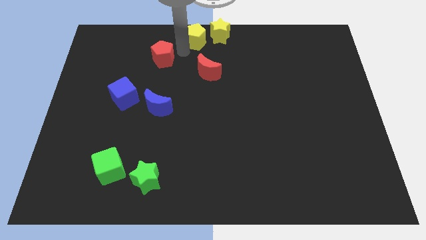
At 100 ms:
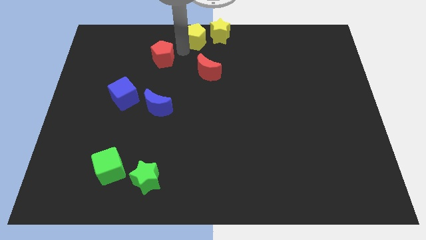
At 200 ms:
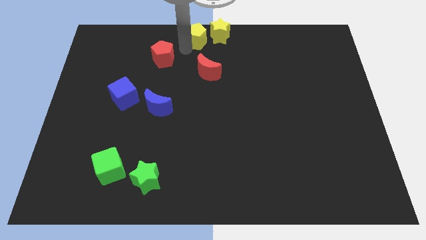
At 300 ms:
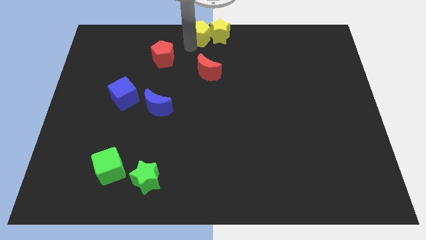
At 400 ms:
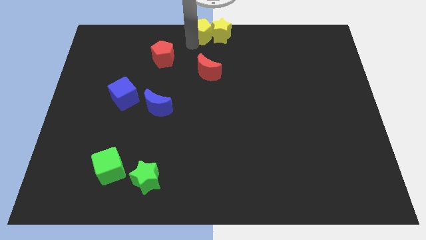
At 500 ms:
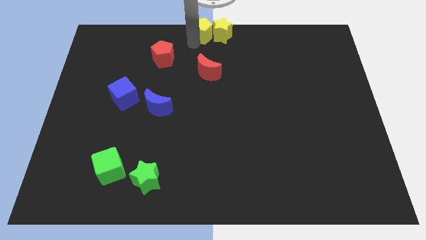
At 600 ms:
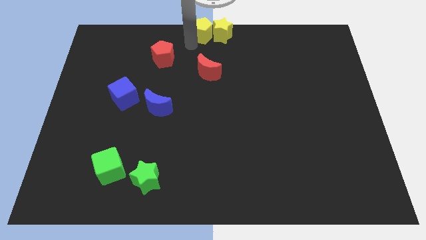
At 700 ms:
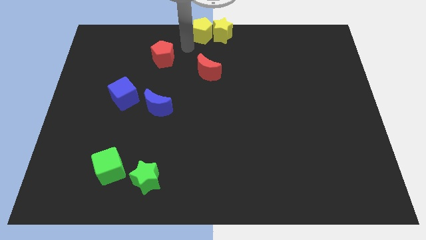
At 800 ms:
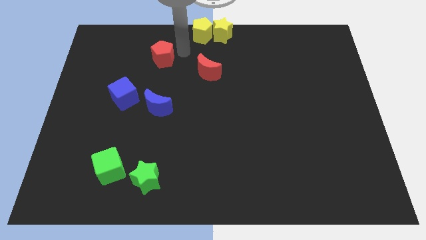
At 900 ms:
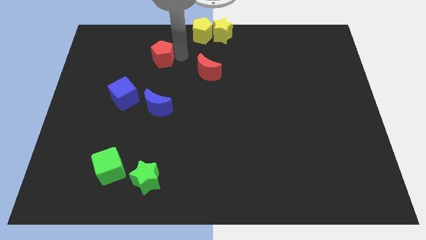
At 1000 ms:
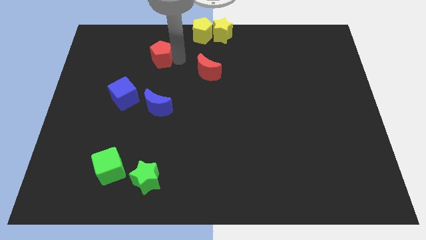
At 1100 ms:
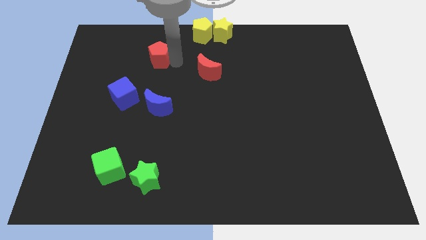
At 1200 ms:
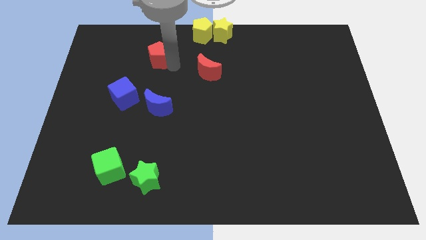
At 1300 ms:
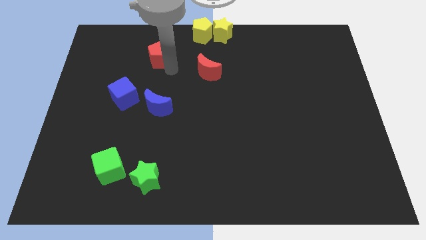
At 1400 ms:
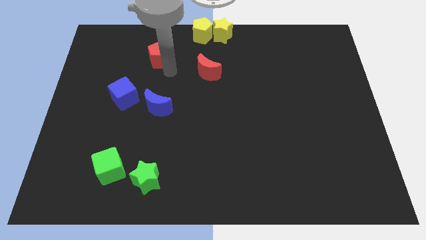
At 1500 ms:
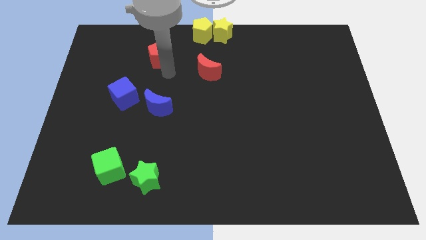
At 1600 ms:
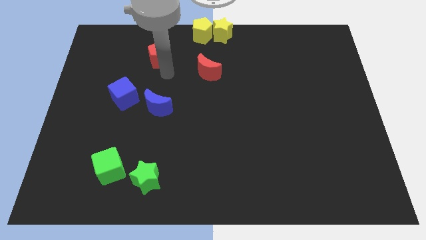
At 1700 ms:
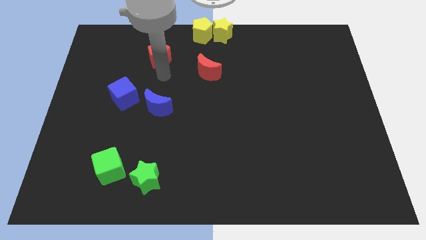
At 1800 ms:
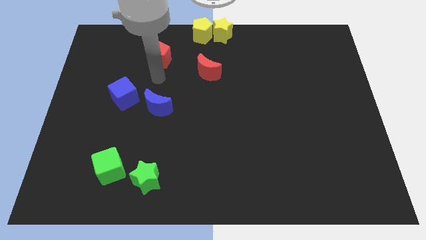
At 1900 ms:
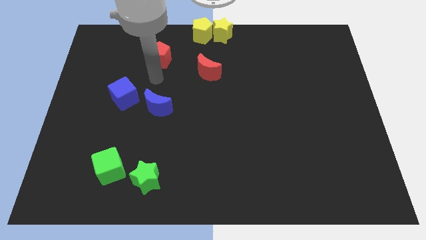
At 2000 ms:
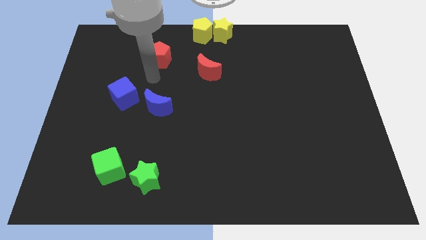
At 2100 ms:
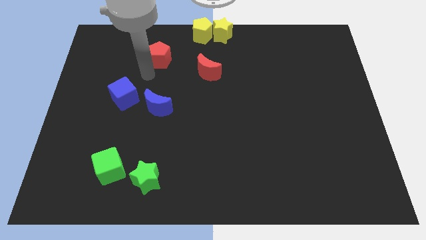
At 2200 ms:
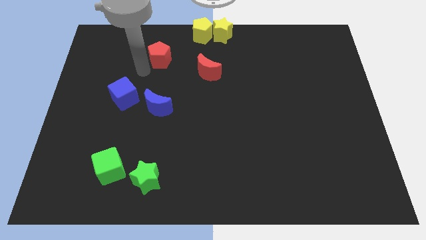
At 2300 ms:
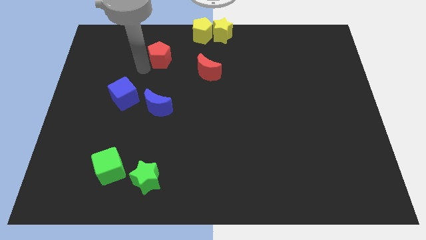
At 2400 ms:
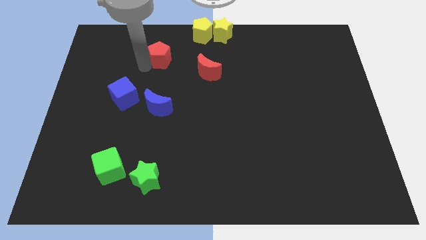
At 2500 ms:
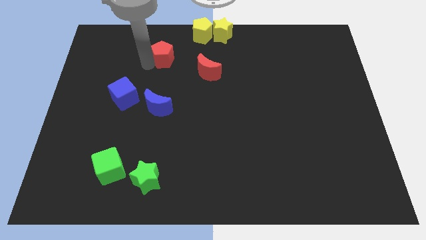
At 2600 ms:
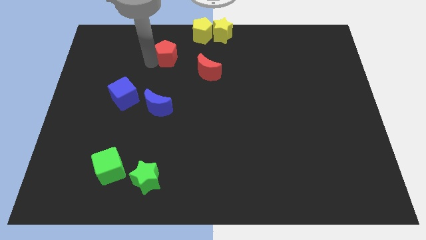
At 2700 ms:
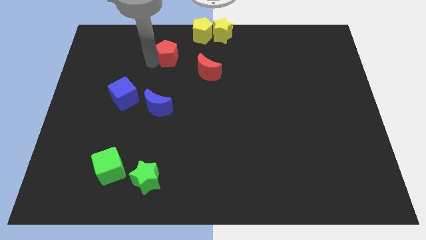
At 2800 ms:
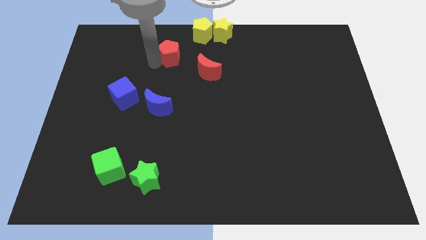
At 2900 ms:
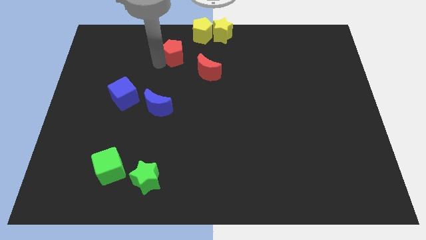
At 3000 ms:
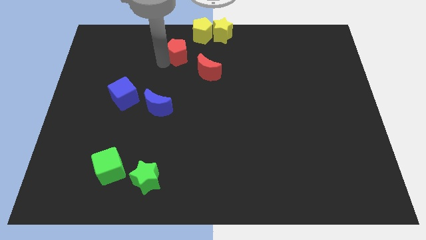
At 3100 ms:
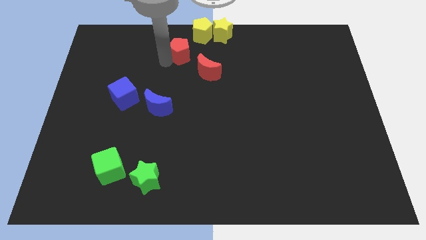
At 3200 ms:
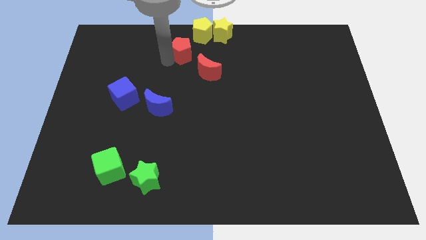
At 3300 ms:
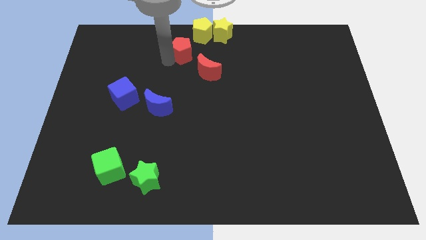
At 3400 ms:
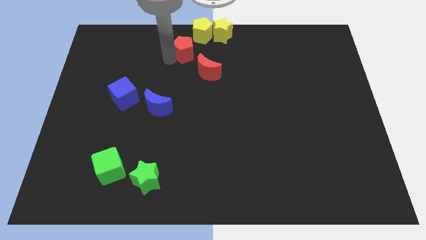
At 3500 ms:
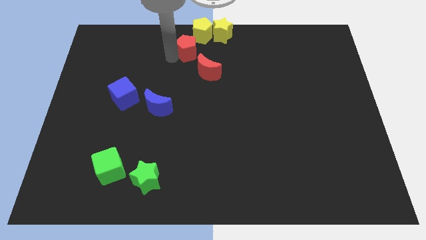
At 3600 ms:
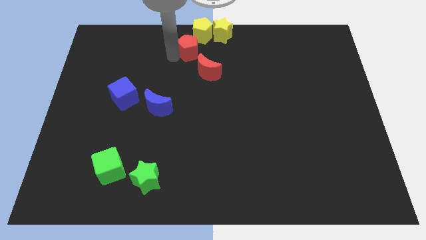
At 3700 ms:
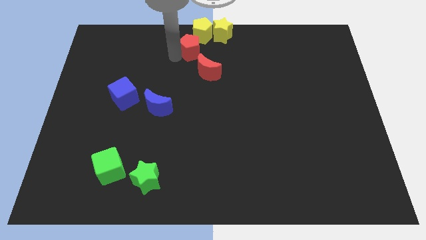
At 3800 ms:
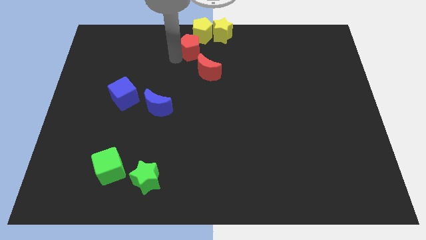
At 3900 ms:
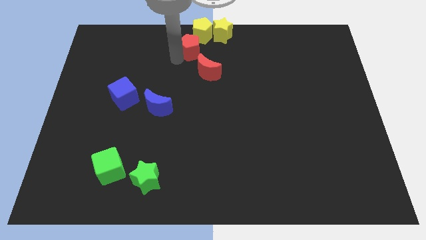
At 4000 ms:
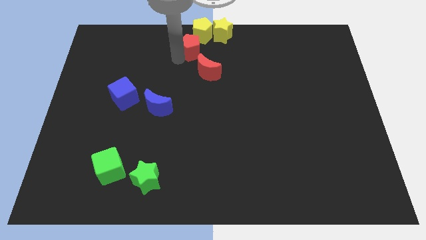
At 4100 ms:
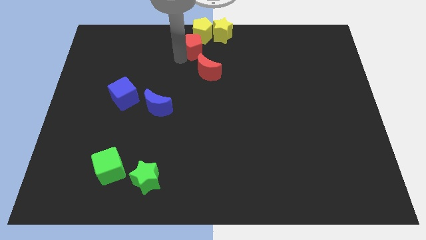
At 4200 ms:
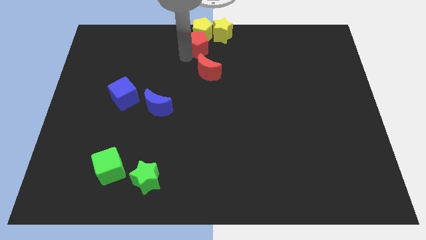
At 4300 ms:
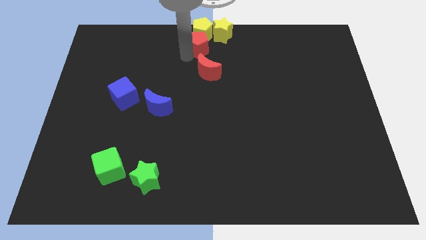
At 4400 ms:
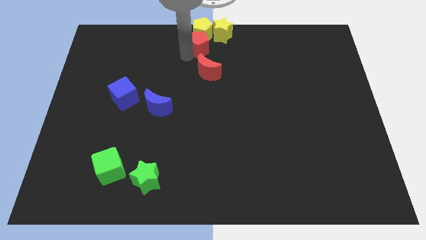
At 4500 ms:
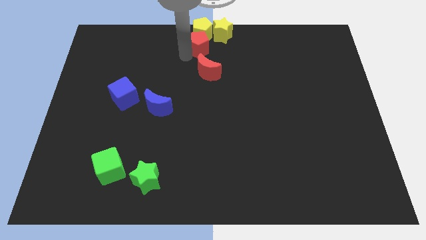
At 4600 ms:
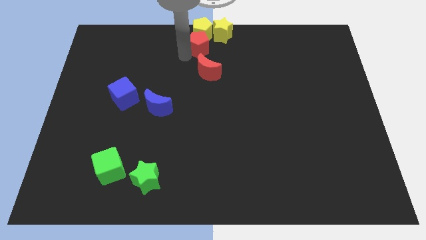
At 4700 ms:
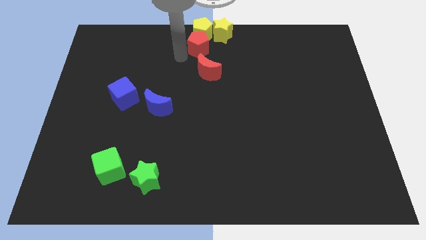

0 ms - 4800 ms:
place red pentagon below the yellow pentagon

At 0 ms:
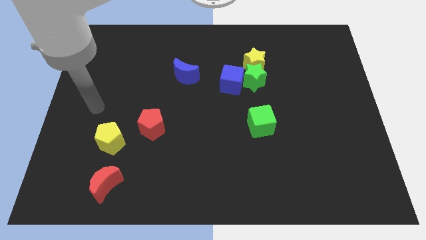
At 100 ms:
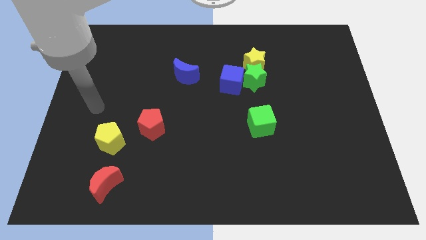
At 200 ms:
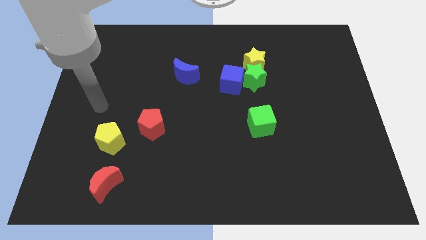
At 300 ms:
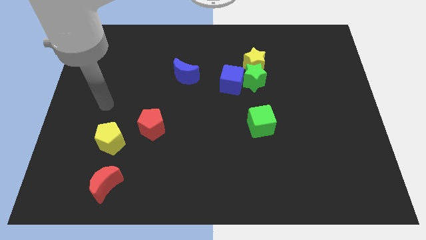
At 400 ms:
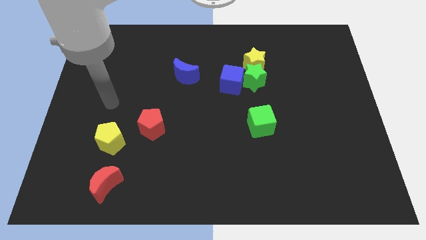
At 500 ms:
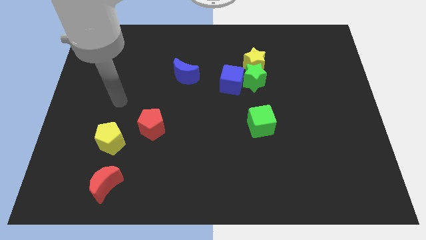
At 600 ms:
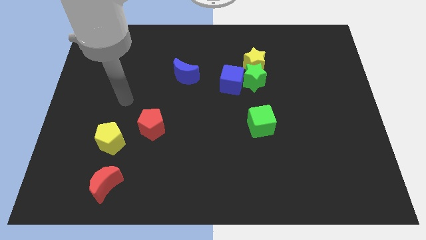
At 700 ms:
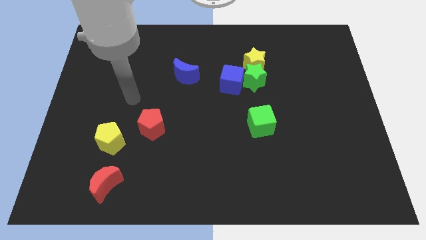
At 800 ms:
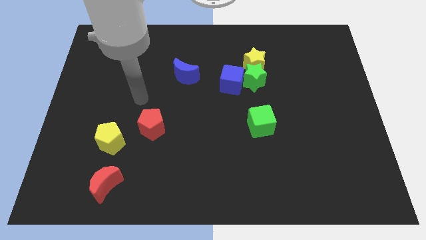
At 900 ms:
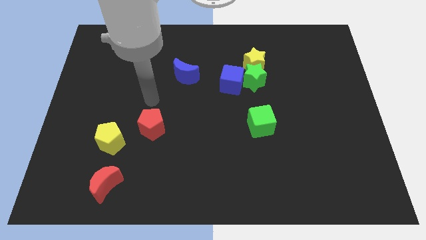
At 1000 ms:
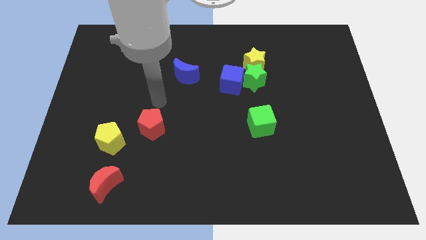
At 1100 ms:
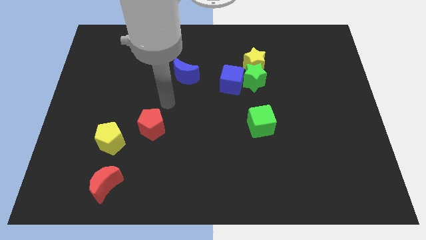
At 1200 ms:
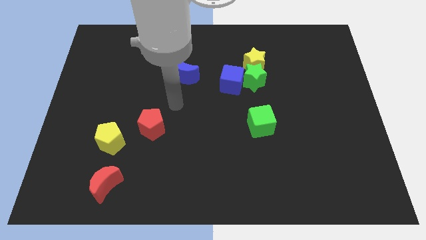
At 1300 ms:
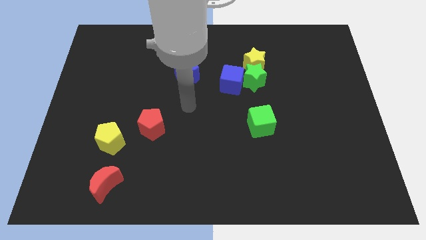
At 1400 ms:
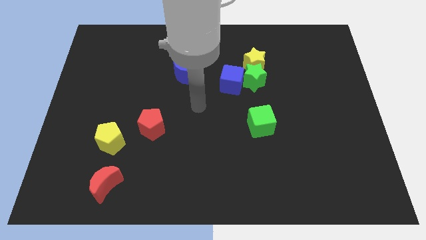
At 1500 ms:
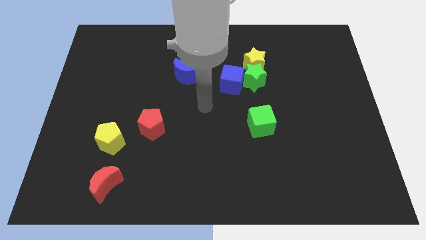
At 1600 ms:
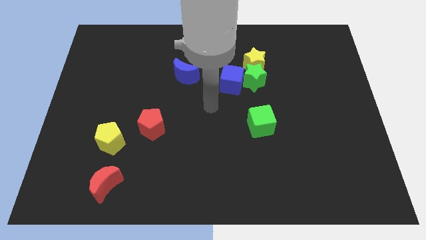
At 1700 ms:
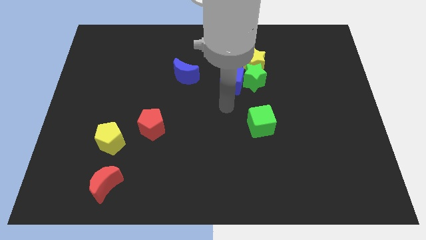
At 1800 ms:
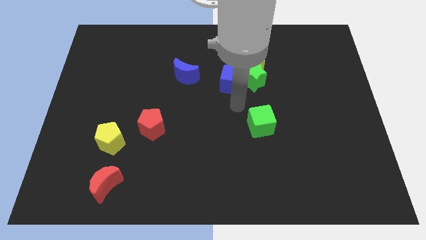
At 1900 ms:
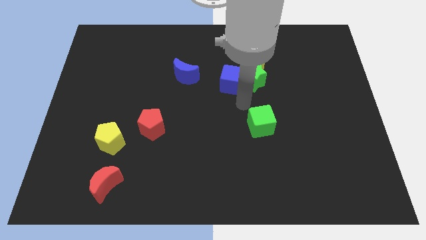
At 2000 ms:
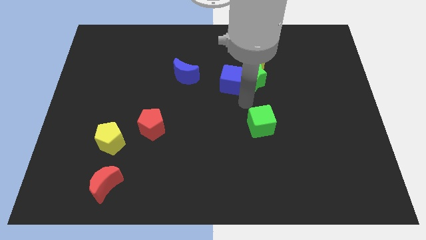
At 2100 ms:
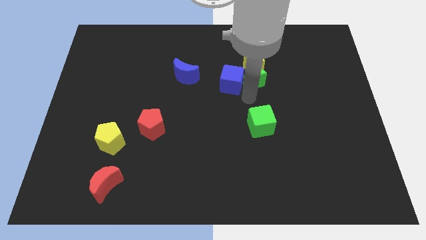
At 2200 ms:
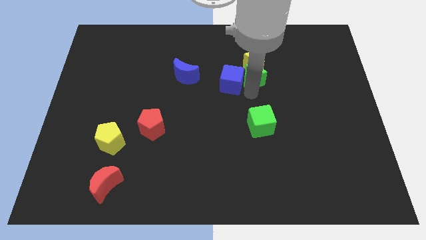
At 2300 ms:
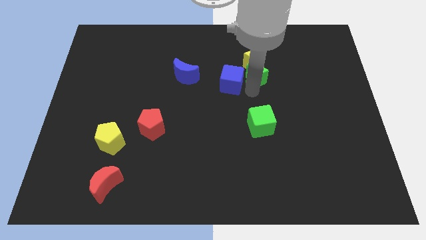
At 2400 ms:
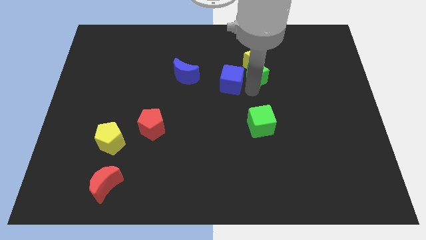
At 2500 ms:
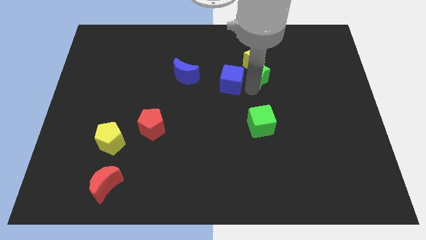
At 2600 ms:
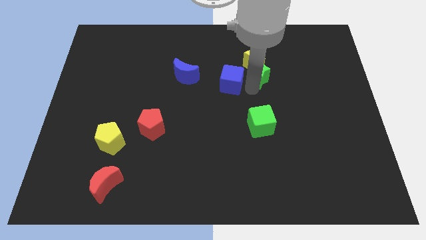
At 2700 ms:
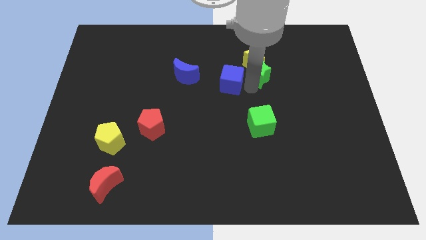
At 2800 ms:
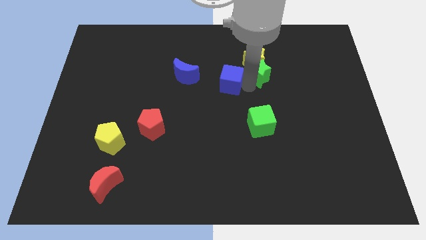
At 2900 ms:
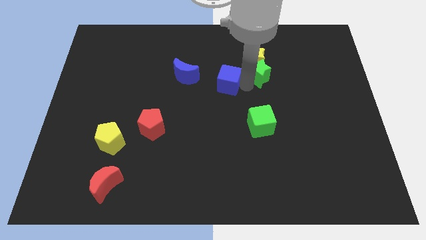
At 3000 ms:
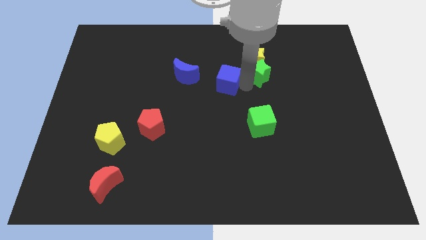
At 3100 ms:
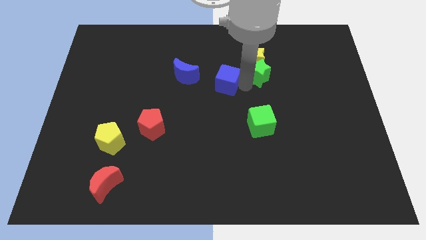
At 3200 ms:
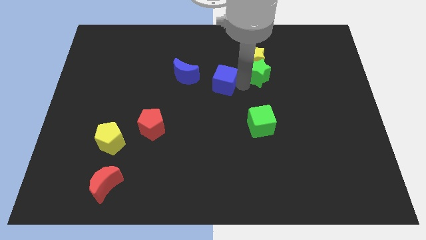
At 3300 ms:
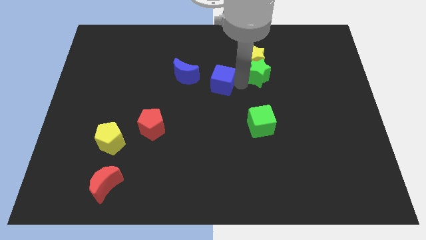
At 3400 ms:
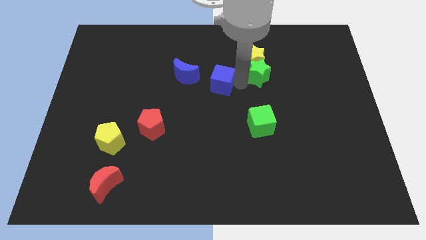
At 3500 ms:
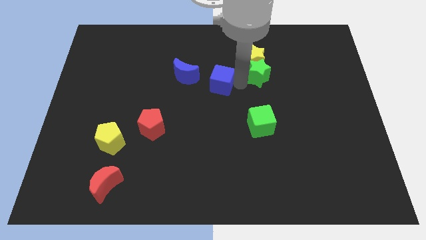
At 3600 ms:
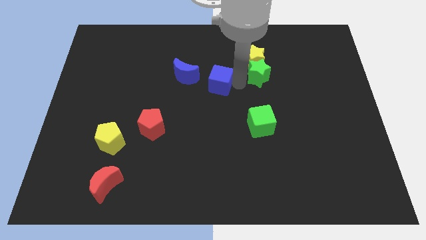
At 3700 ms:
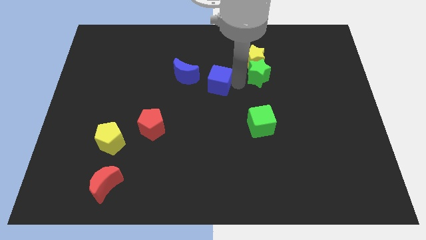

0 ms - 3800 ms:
separate blue cube with green star

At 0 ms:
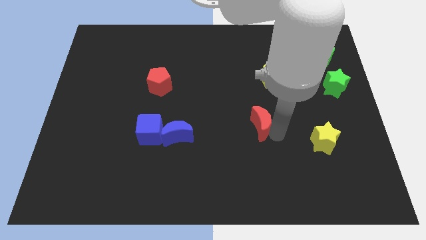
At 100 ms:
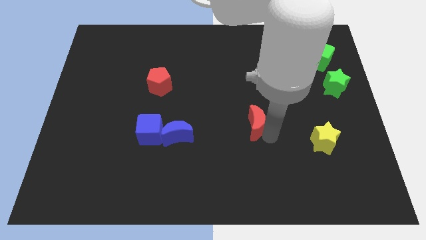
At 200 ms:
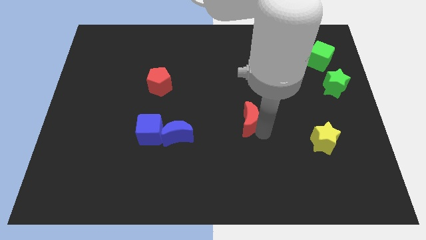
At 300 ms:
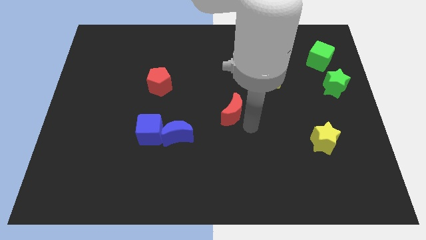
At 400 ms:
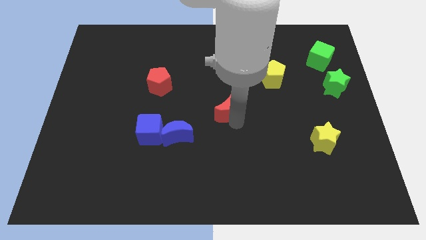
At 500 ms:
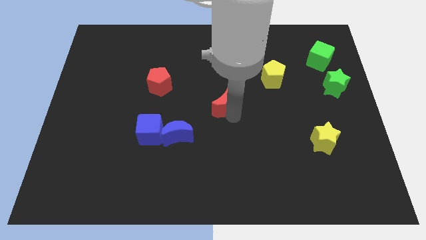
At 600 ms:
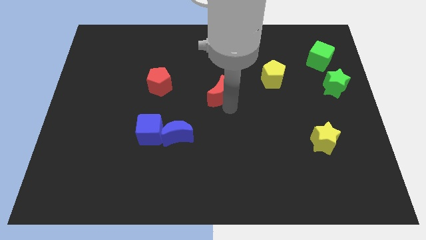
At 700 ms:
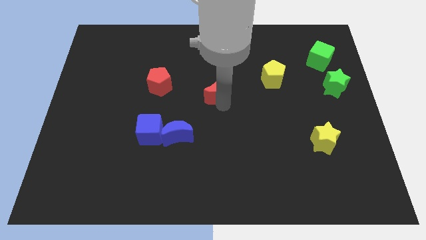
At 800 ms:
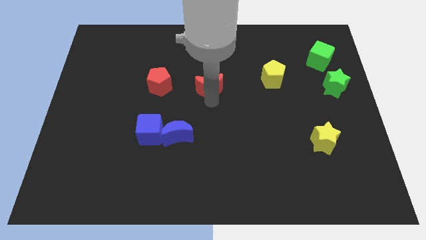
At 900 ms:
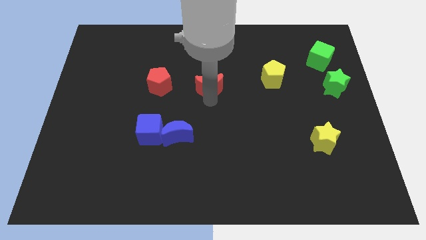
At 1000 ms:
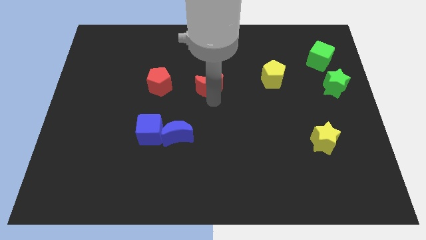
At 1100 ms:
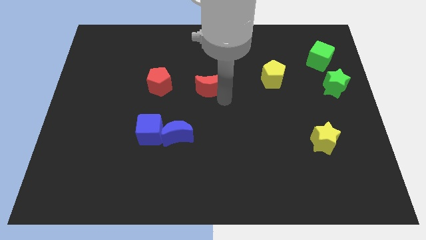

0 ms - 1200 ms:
place the red moon parallel right to the red pentagon
